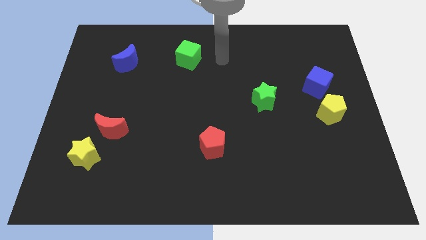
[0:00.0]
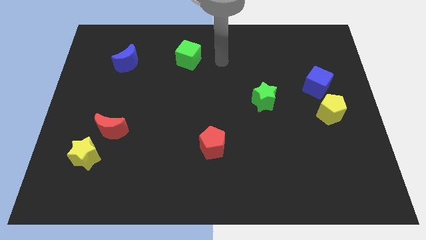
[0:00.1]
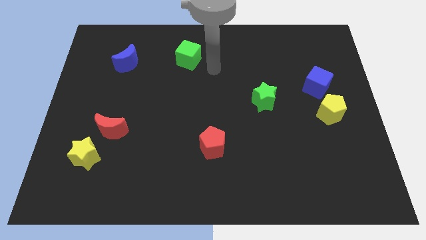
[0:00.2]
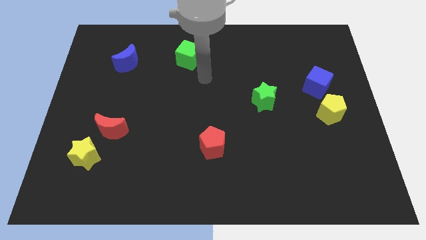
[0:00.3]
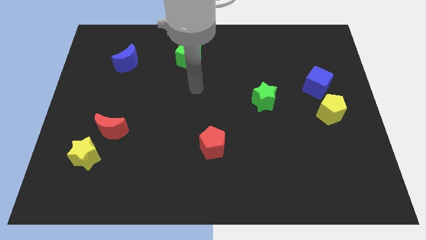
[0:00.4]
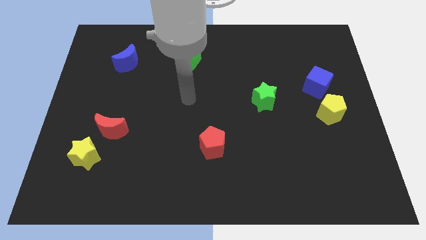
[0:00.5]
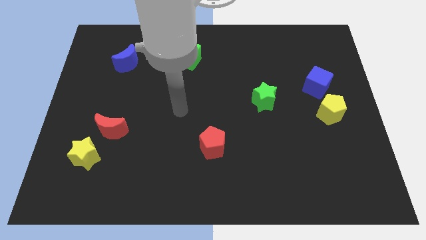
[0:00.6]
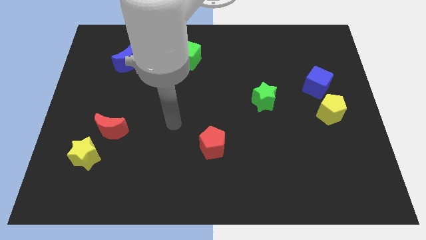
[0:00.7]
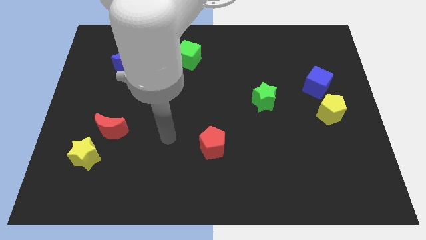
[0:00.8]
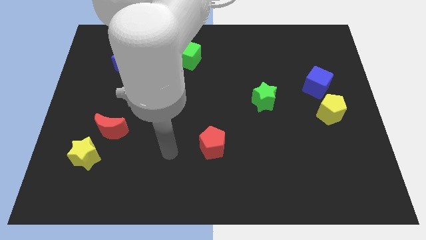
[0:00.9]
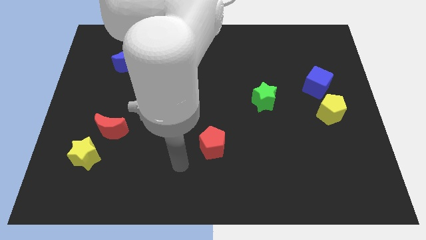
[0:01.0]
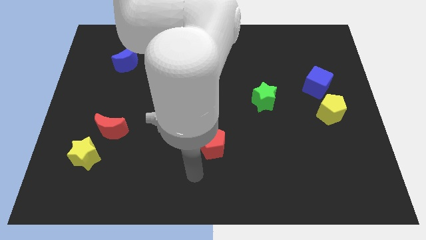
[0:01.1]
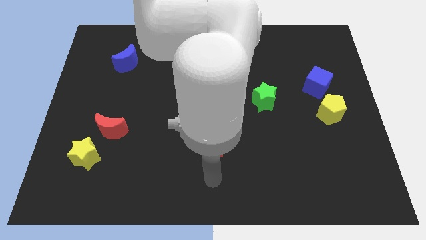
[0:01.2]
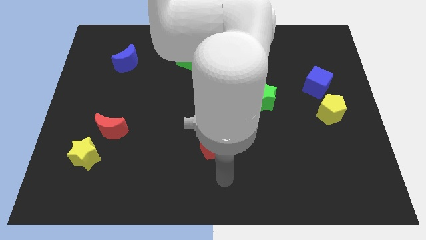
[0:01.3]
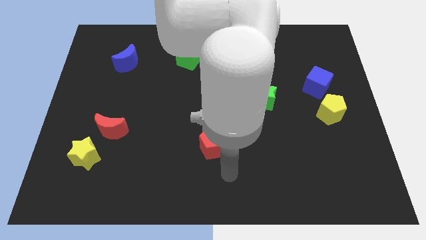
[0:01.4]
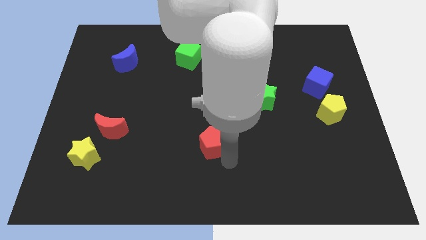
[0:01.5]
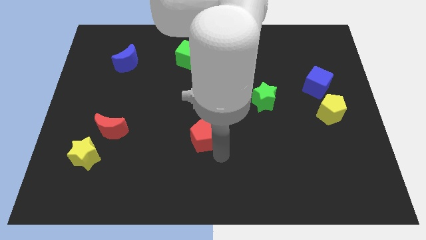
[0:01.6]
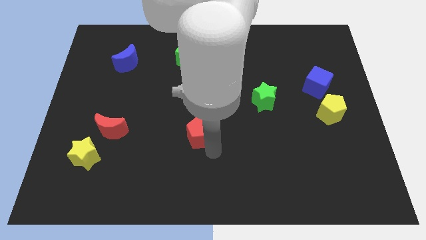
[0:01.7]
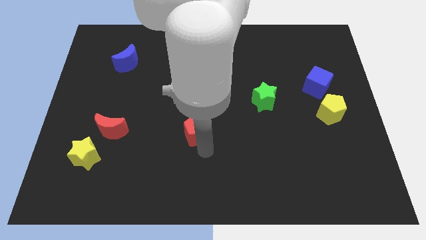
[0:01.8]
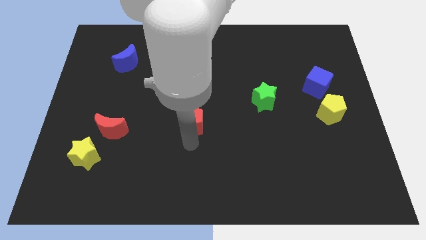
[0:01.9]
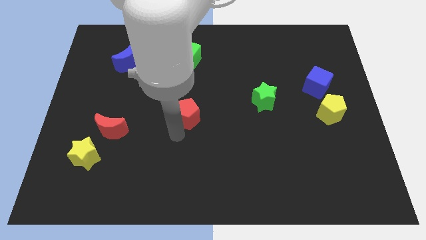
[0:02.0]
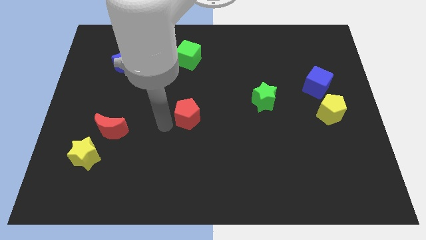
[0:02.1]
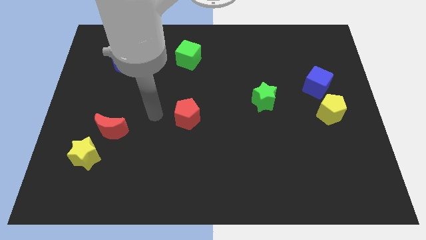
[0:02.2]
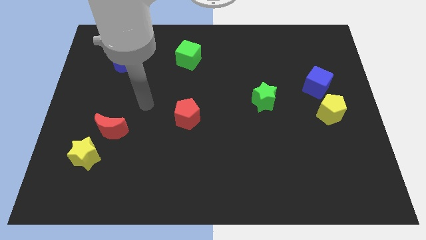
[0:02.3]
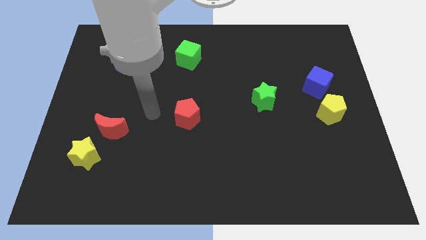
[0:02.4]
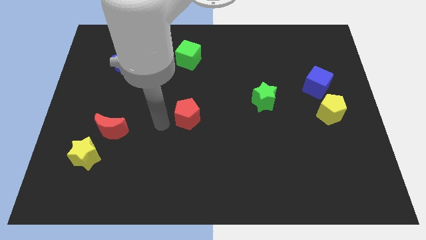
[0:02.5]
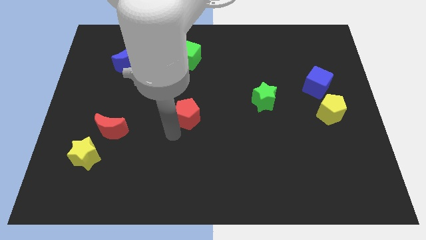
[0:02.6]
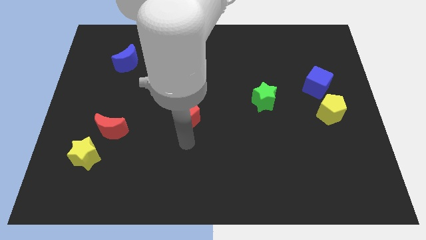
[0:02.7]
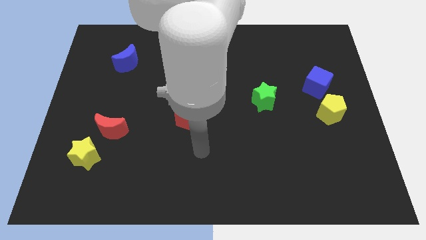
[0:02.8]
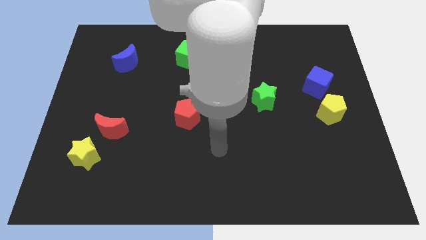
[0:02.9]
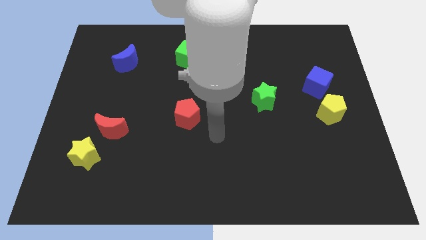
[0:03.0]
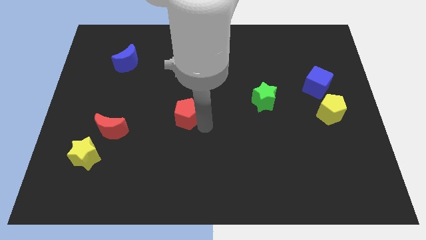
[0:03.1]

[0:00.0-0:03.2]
place the red pentagon to the center of the board

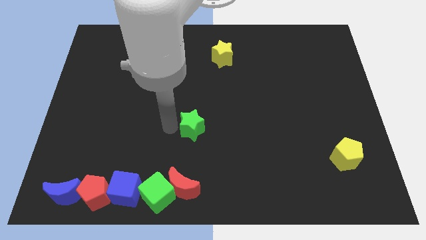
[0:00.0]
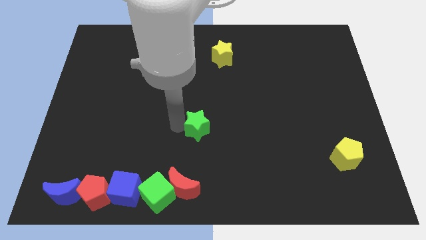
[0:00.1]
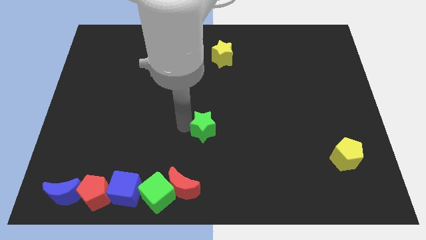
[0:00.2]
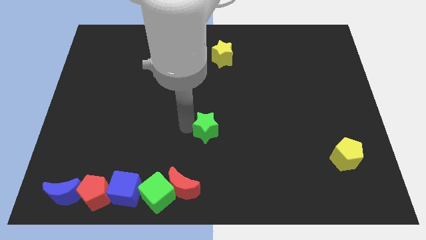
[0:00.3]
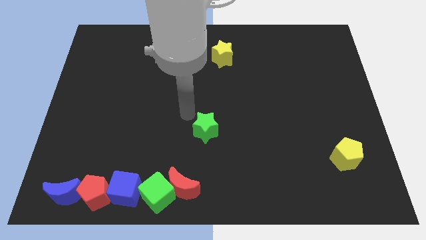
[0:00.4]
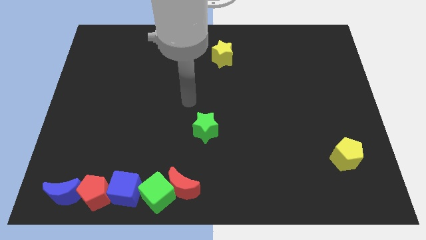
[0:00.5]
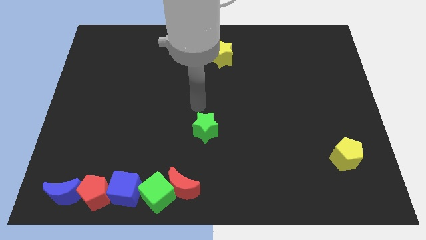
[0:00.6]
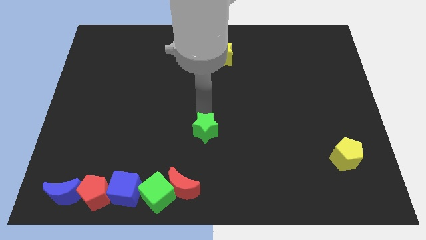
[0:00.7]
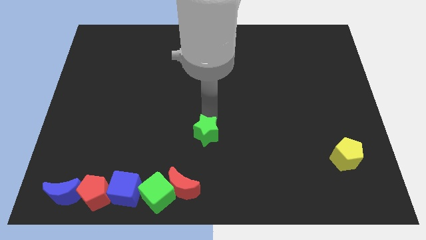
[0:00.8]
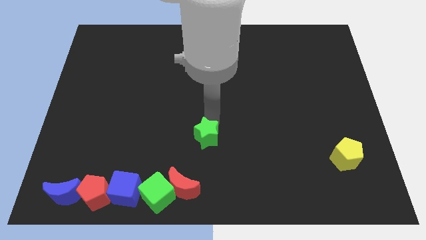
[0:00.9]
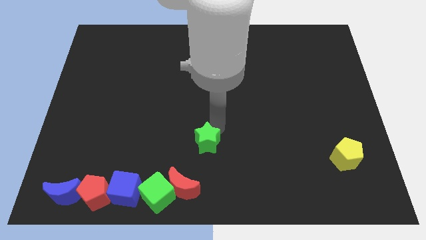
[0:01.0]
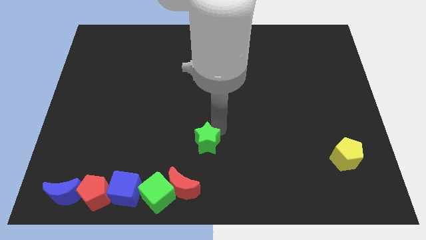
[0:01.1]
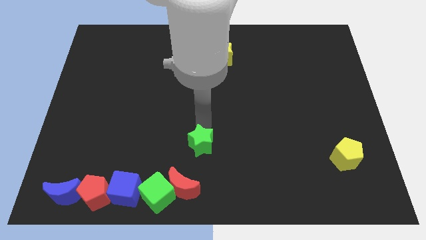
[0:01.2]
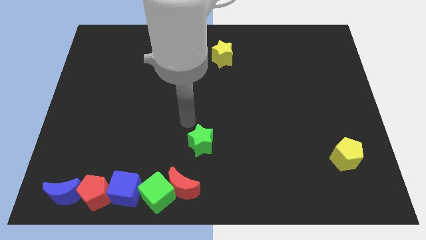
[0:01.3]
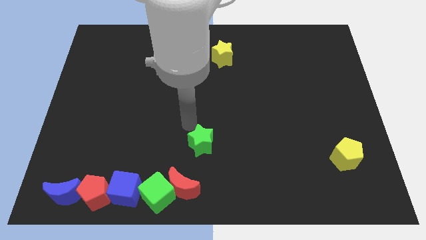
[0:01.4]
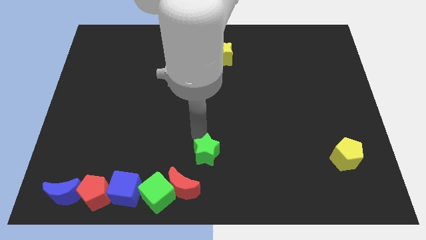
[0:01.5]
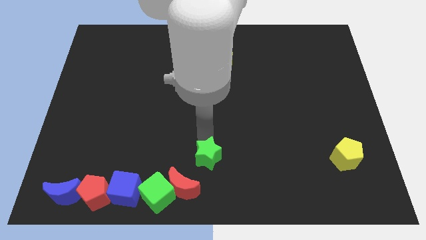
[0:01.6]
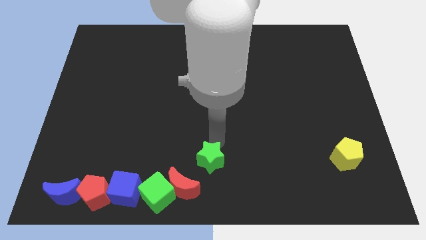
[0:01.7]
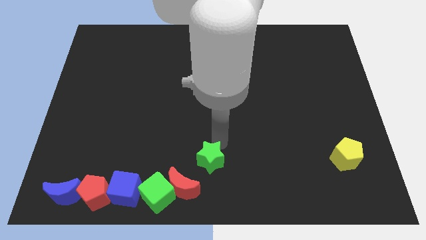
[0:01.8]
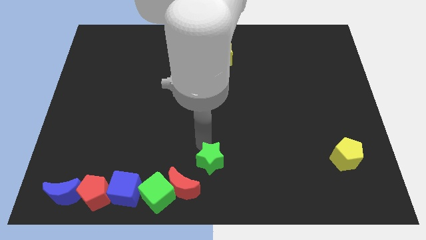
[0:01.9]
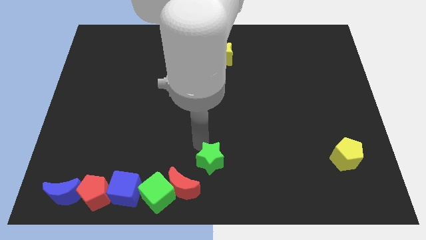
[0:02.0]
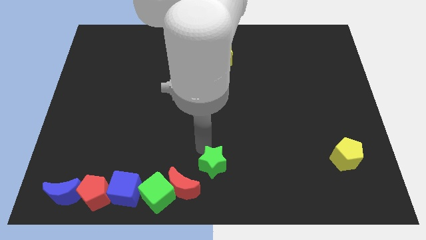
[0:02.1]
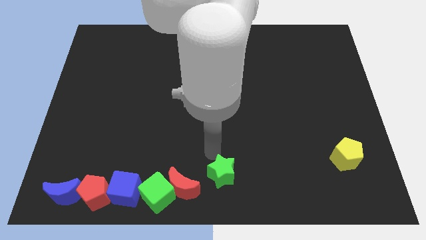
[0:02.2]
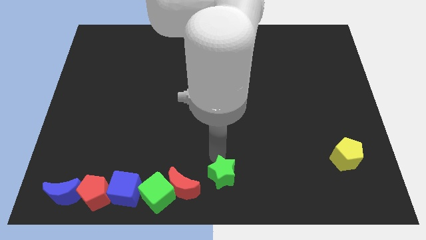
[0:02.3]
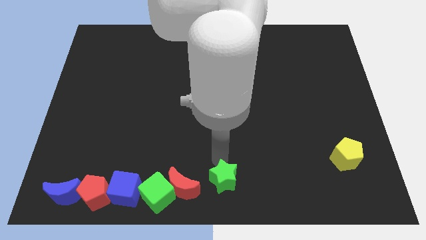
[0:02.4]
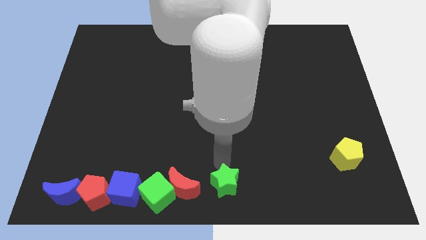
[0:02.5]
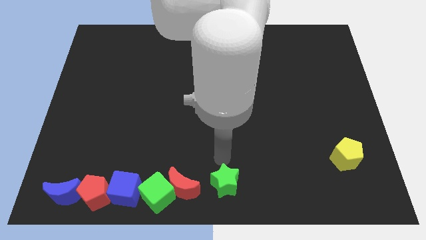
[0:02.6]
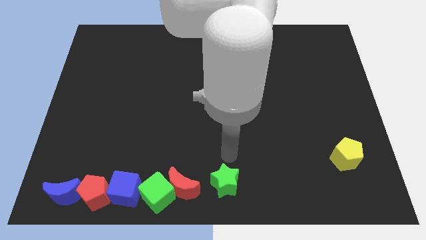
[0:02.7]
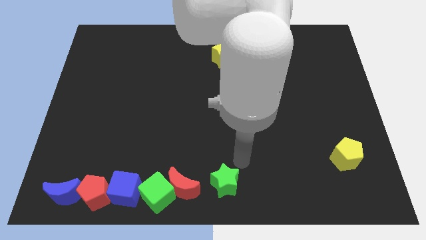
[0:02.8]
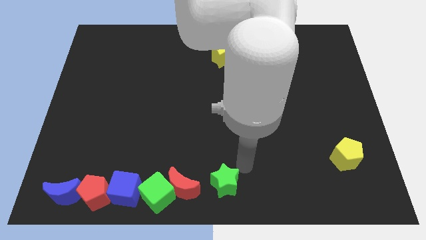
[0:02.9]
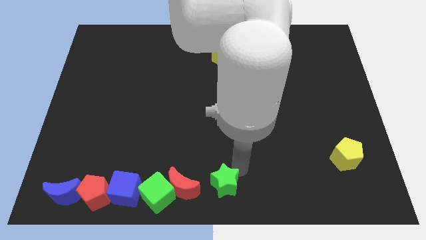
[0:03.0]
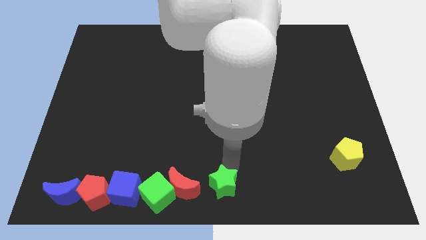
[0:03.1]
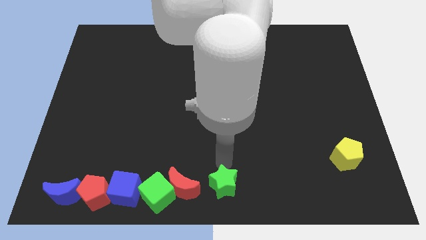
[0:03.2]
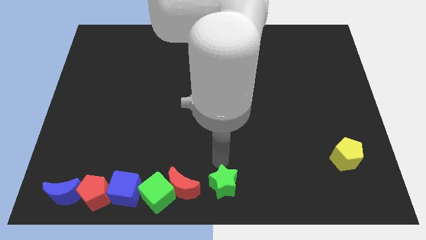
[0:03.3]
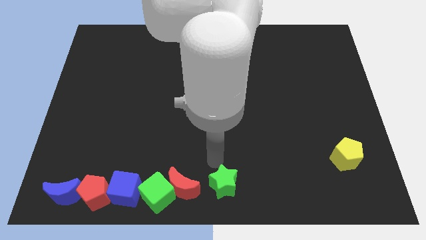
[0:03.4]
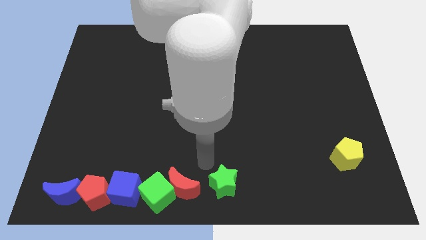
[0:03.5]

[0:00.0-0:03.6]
move the green star to the right of the red moon

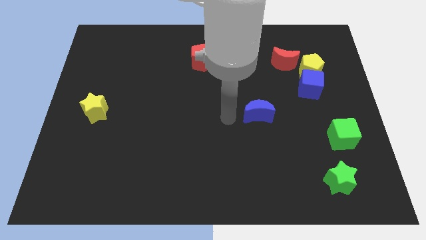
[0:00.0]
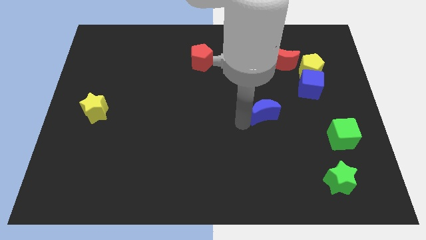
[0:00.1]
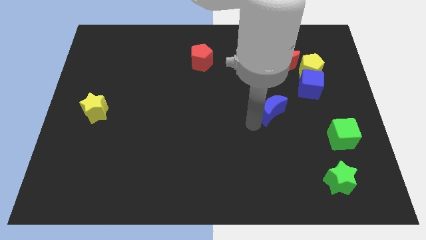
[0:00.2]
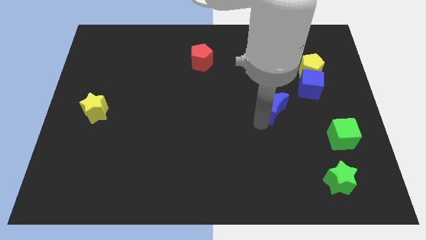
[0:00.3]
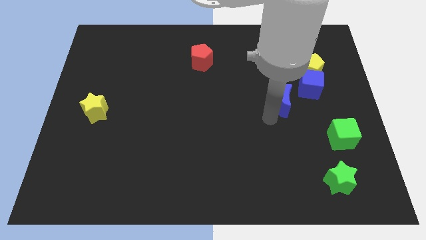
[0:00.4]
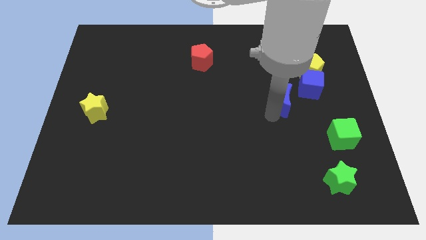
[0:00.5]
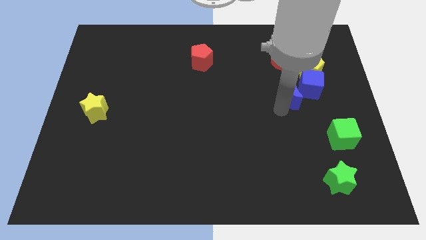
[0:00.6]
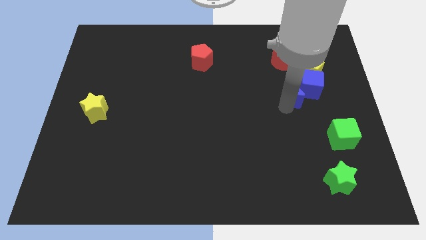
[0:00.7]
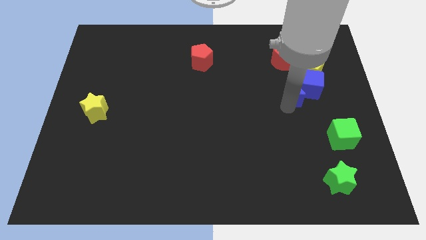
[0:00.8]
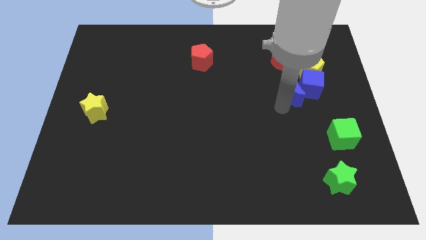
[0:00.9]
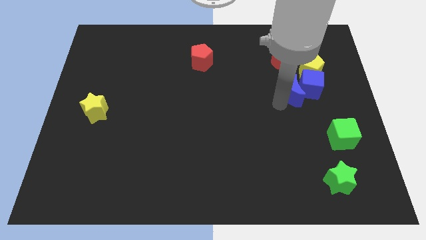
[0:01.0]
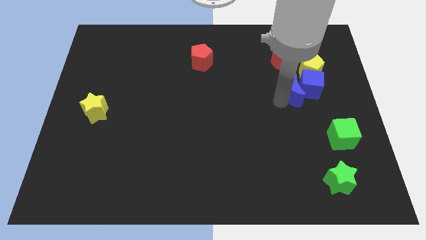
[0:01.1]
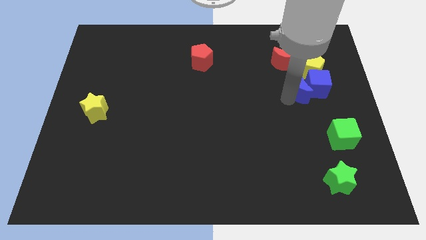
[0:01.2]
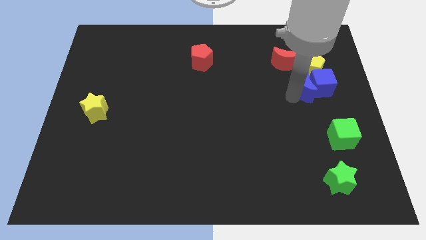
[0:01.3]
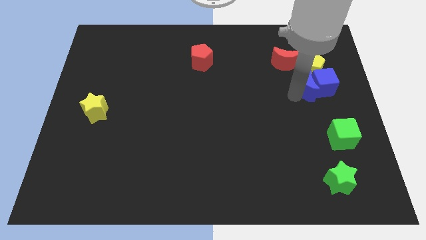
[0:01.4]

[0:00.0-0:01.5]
push the blue crescent into blue cube

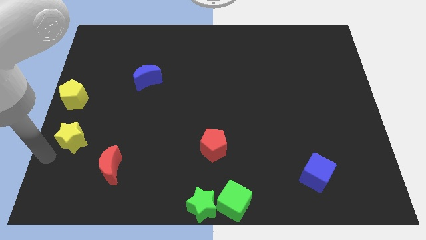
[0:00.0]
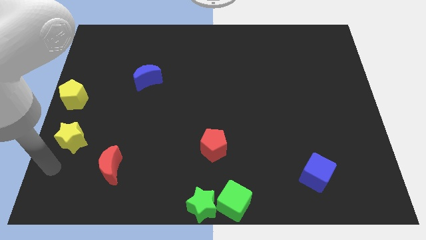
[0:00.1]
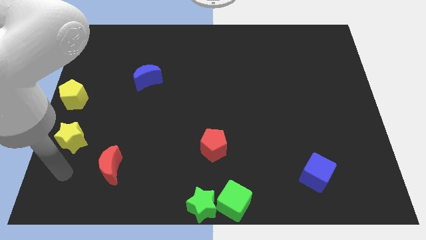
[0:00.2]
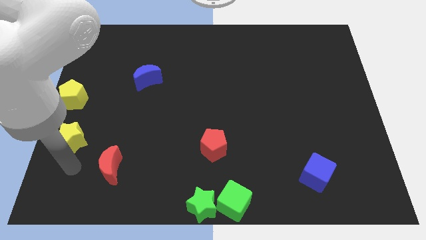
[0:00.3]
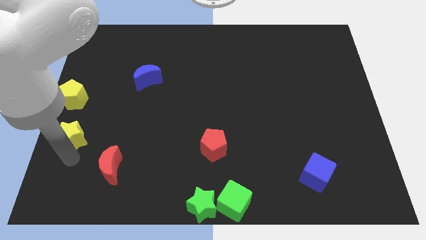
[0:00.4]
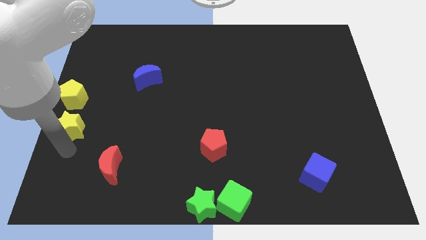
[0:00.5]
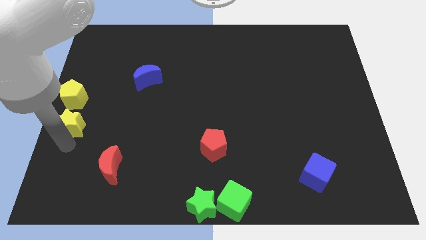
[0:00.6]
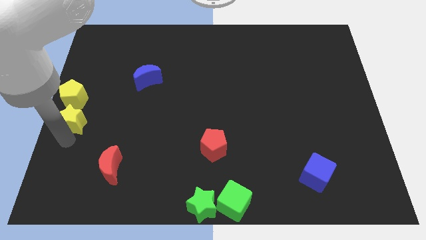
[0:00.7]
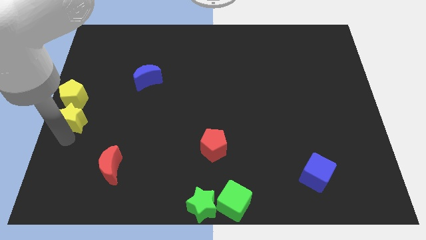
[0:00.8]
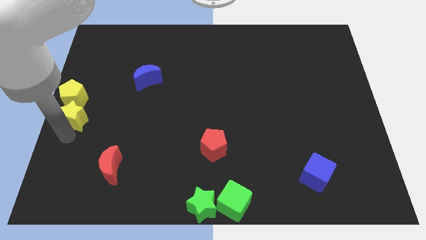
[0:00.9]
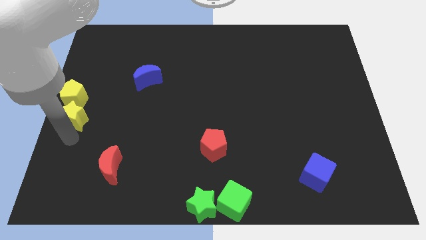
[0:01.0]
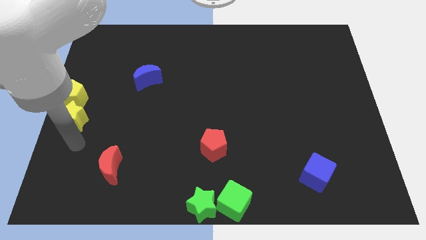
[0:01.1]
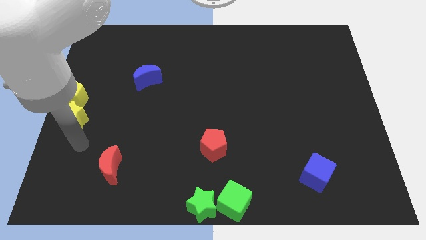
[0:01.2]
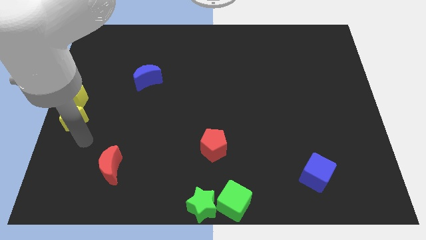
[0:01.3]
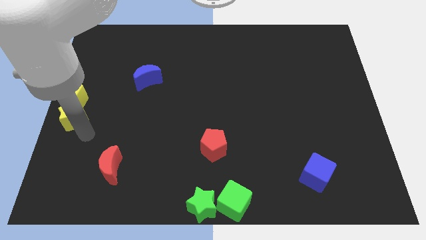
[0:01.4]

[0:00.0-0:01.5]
move the yellow star into the yellow pentagon
